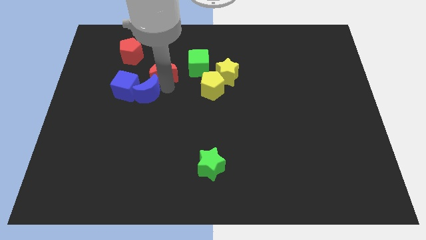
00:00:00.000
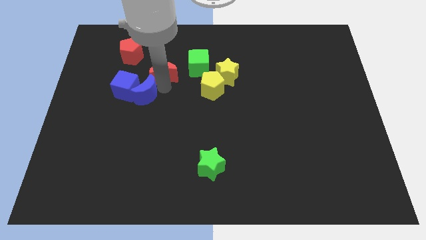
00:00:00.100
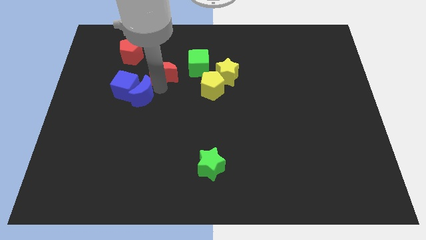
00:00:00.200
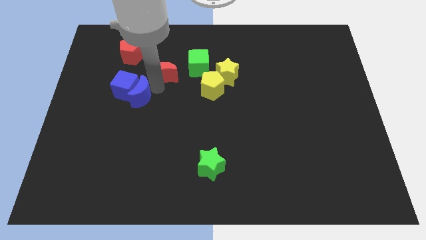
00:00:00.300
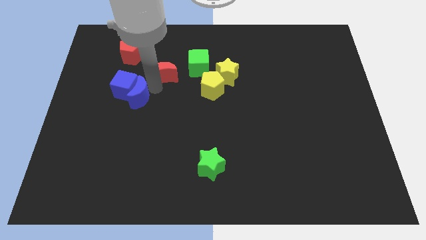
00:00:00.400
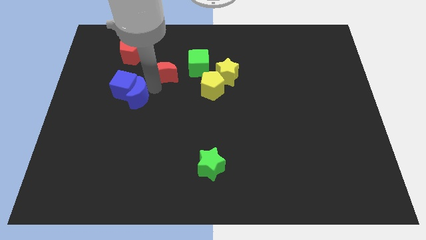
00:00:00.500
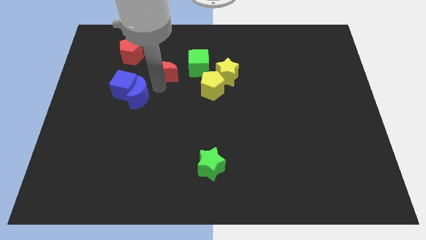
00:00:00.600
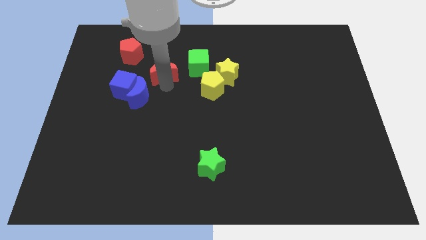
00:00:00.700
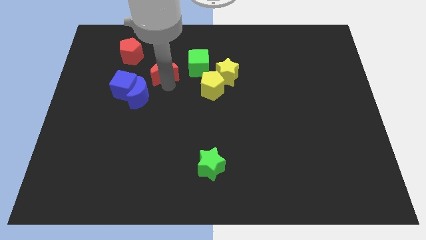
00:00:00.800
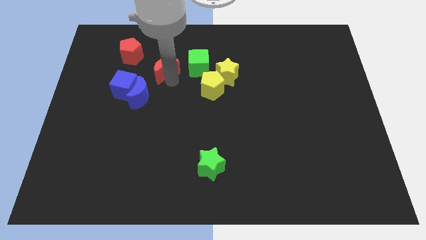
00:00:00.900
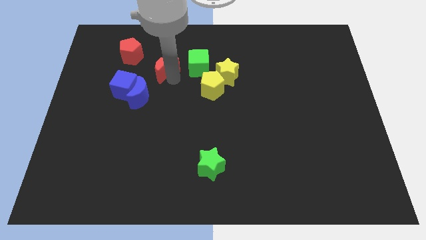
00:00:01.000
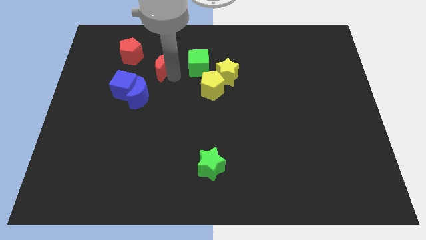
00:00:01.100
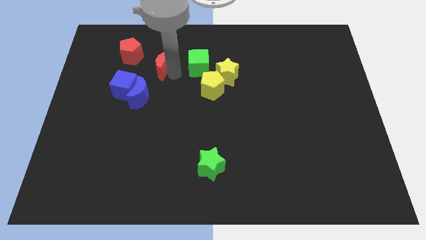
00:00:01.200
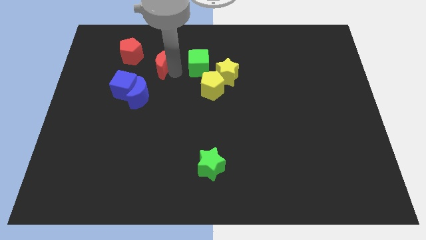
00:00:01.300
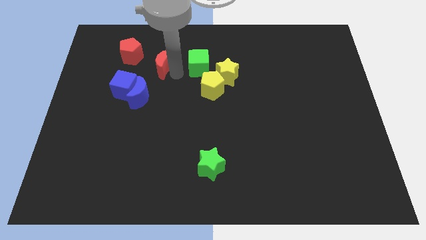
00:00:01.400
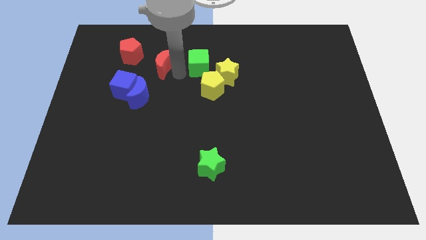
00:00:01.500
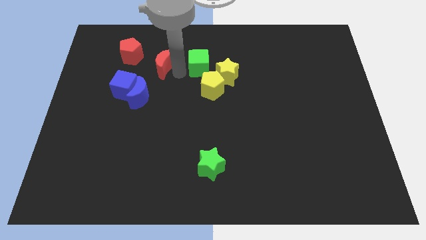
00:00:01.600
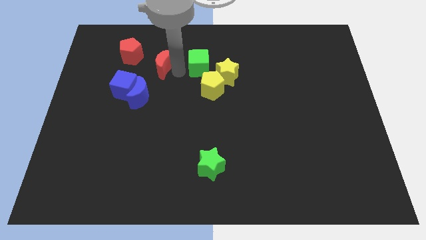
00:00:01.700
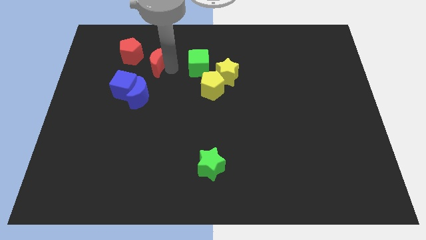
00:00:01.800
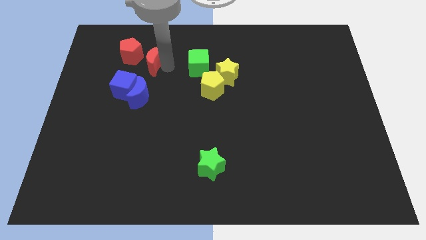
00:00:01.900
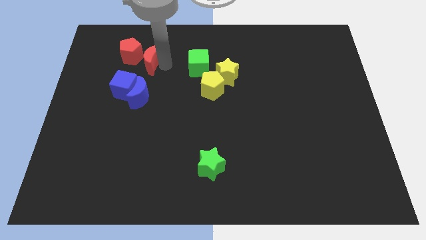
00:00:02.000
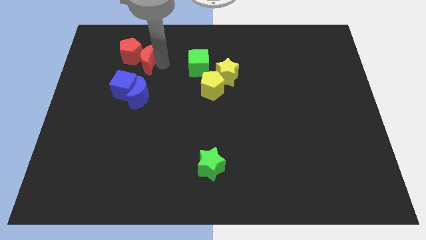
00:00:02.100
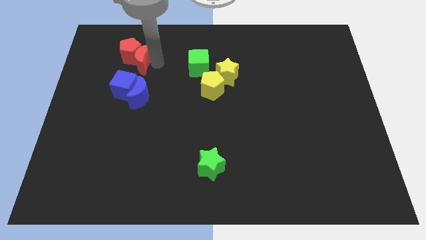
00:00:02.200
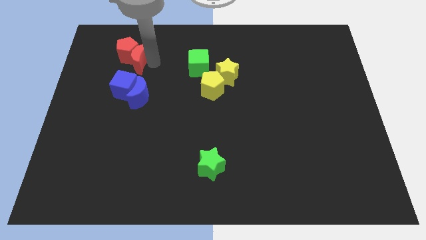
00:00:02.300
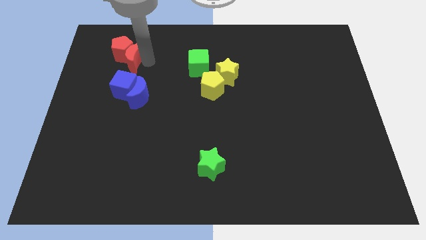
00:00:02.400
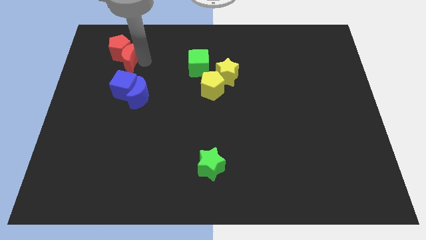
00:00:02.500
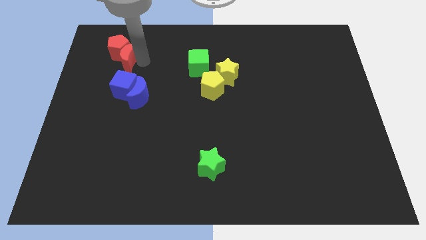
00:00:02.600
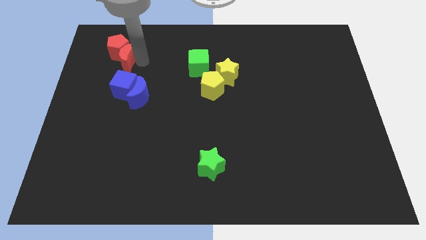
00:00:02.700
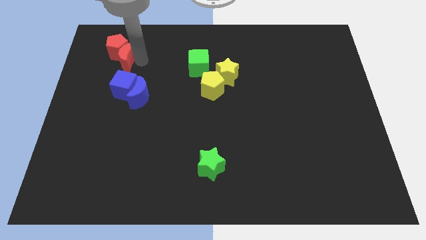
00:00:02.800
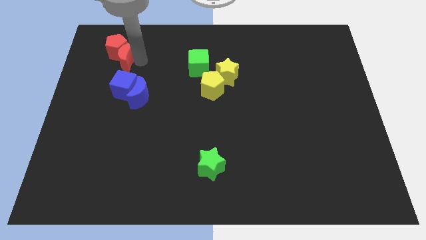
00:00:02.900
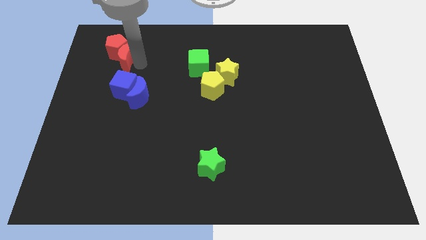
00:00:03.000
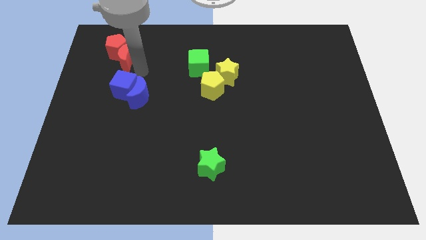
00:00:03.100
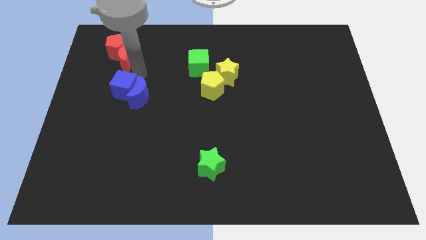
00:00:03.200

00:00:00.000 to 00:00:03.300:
push the red moon into the red pentagon

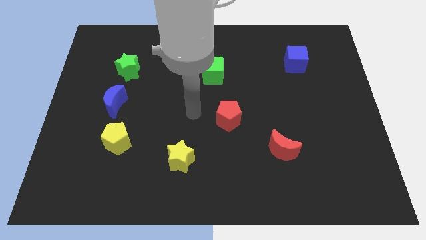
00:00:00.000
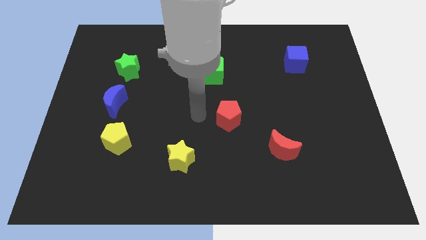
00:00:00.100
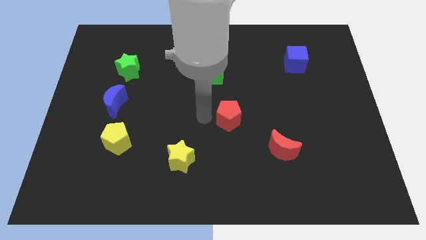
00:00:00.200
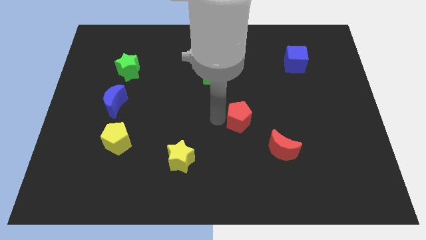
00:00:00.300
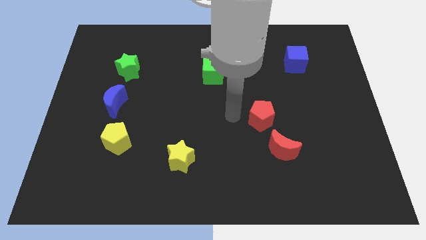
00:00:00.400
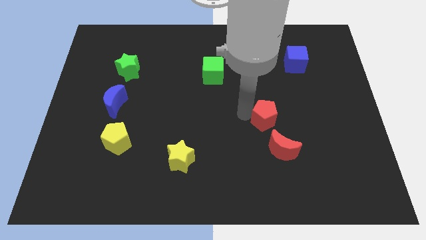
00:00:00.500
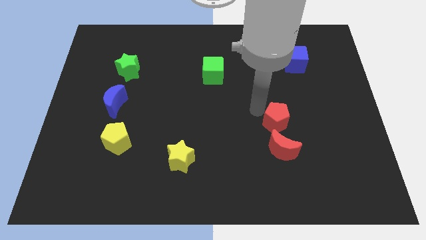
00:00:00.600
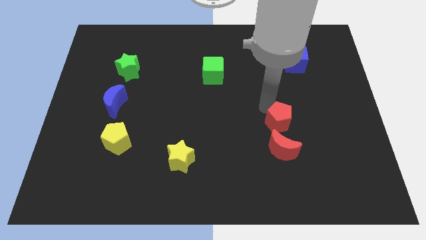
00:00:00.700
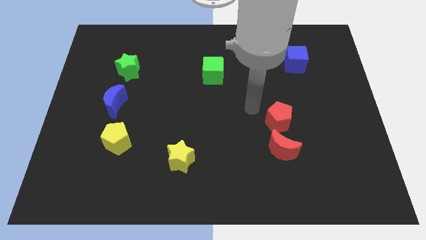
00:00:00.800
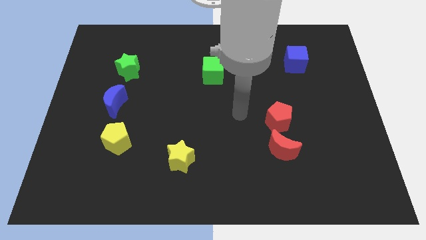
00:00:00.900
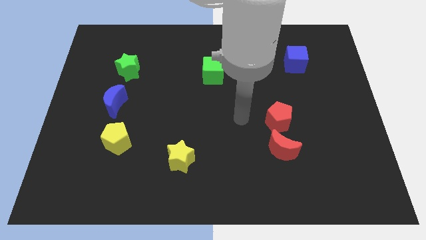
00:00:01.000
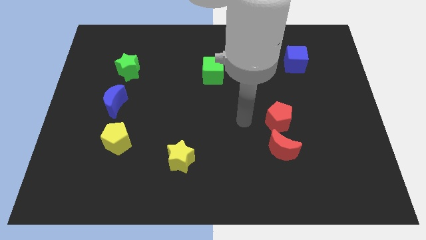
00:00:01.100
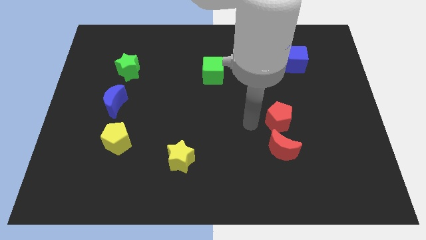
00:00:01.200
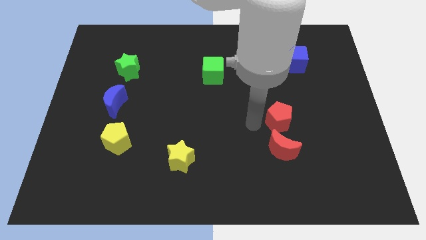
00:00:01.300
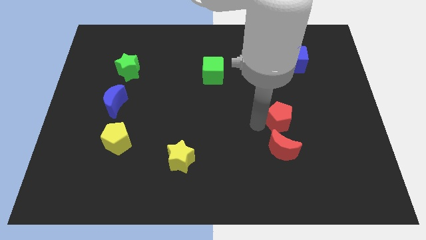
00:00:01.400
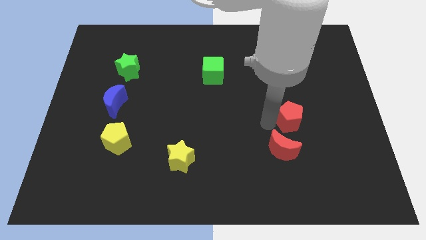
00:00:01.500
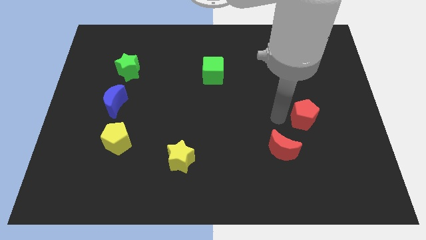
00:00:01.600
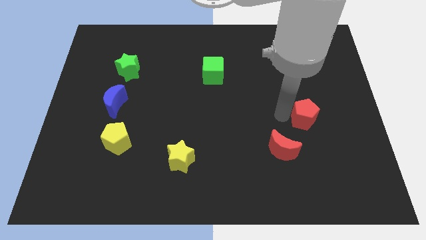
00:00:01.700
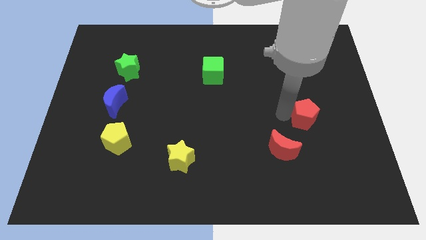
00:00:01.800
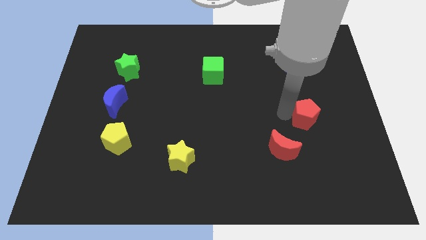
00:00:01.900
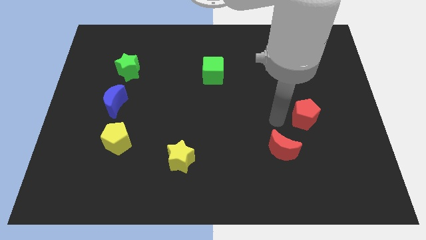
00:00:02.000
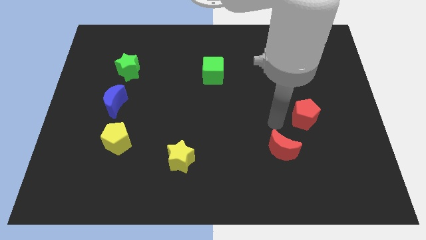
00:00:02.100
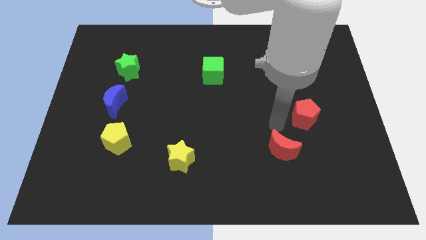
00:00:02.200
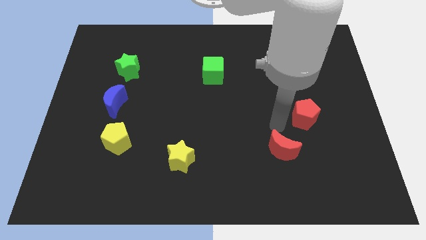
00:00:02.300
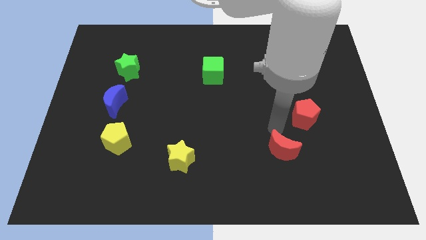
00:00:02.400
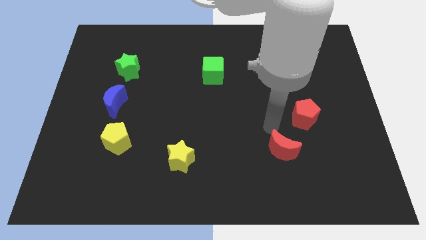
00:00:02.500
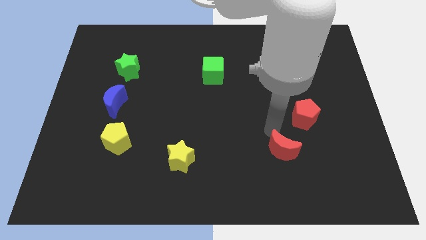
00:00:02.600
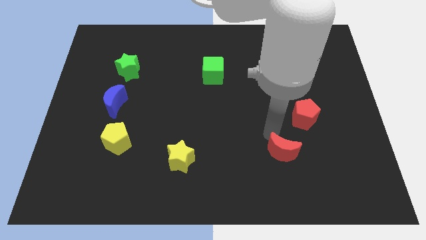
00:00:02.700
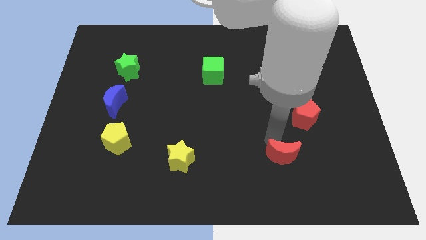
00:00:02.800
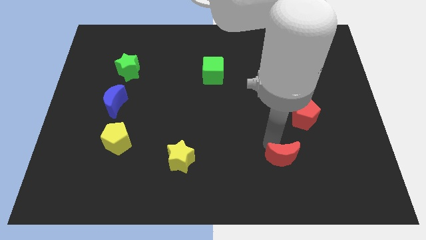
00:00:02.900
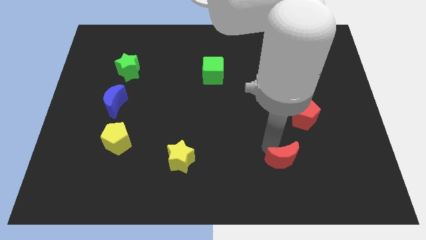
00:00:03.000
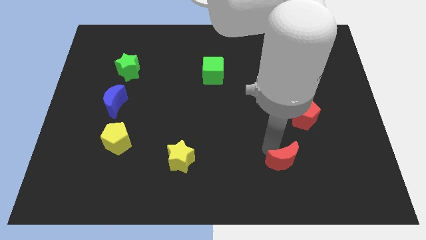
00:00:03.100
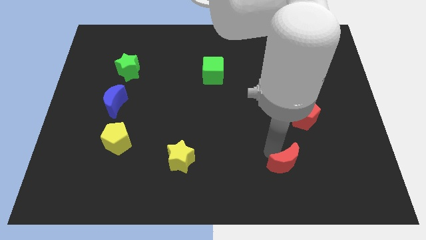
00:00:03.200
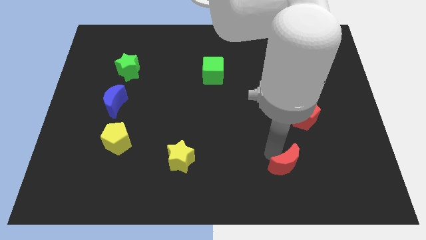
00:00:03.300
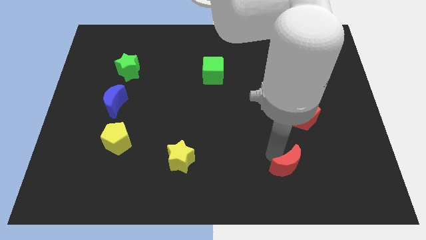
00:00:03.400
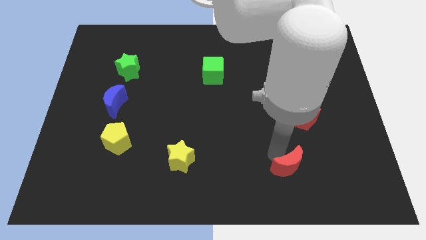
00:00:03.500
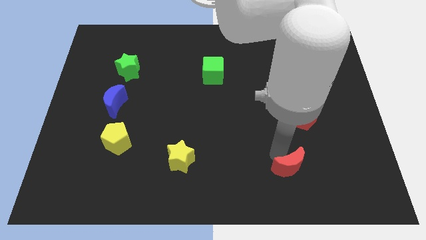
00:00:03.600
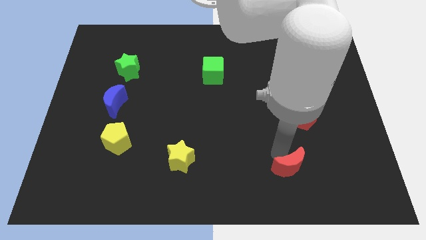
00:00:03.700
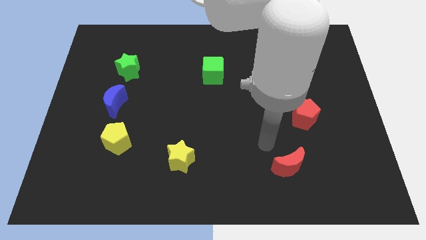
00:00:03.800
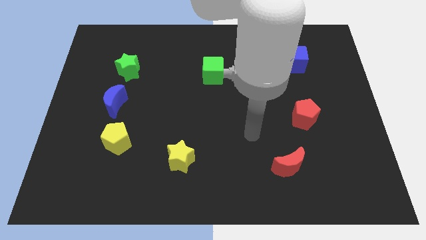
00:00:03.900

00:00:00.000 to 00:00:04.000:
separate the red pentagon and red moon

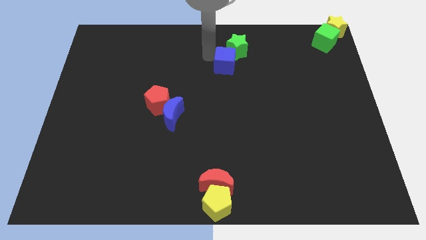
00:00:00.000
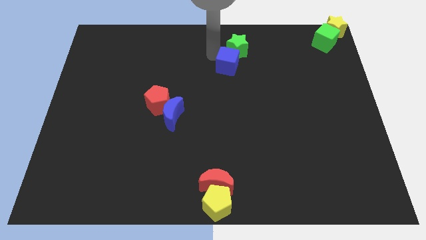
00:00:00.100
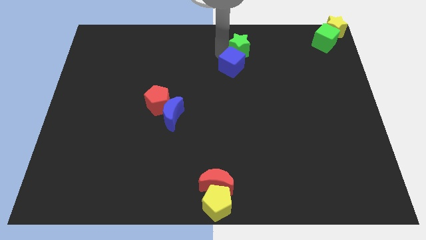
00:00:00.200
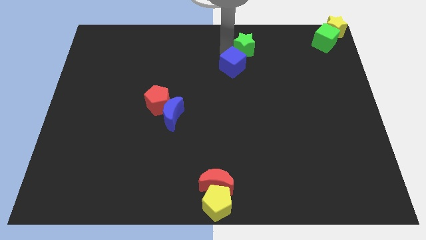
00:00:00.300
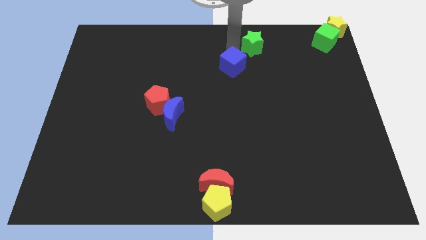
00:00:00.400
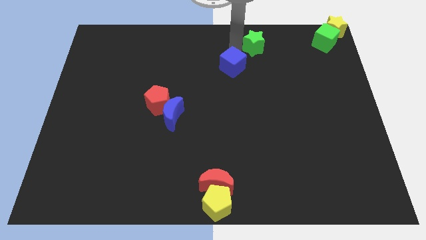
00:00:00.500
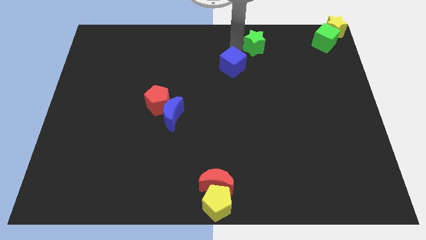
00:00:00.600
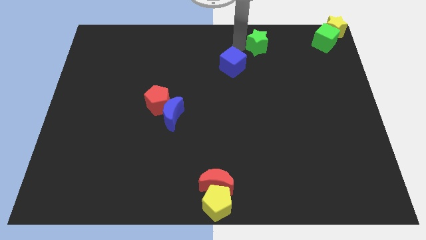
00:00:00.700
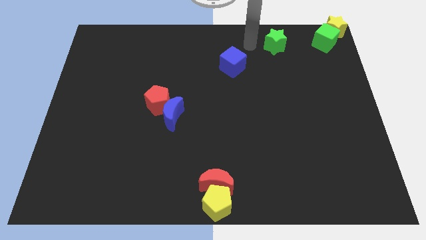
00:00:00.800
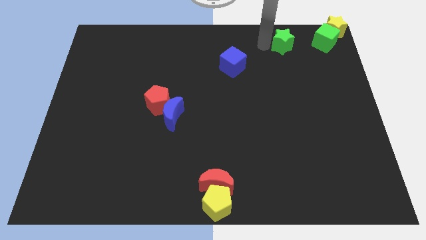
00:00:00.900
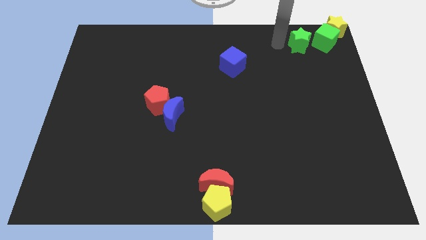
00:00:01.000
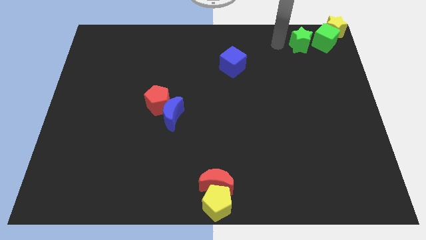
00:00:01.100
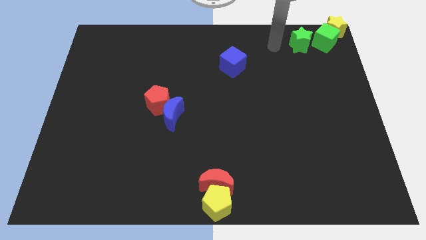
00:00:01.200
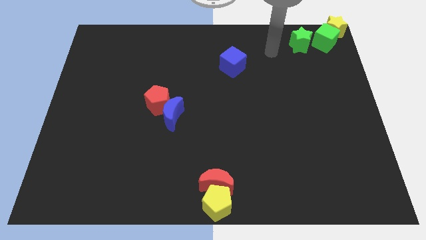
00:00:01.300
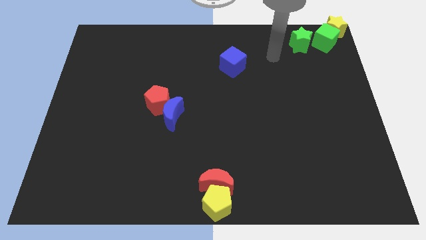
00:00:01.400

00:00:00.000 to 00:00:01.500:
move the green star close to the green cube
